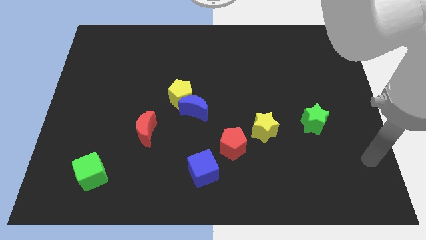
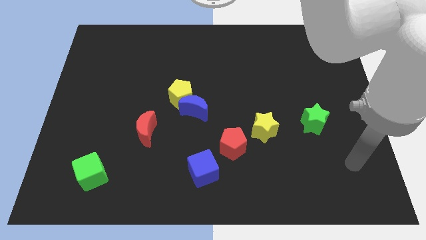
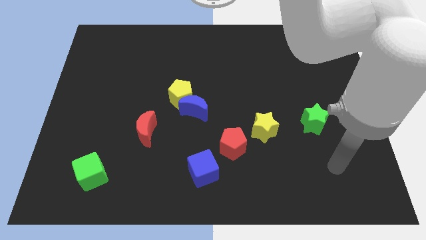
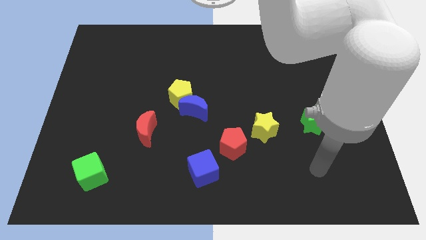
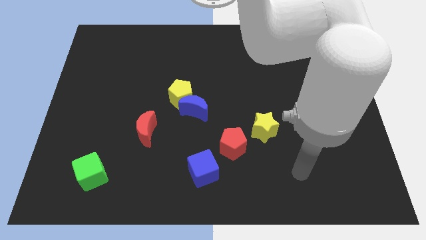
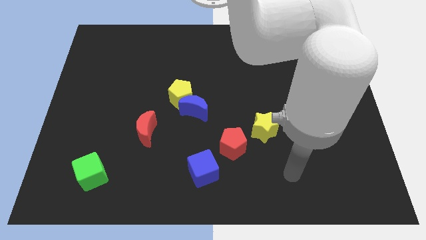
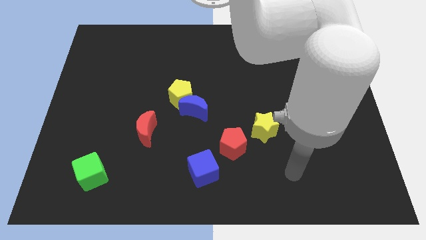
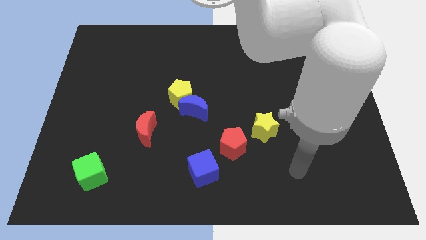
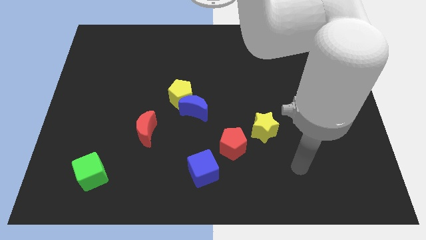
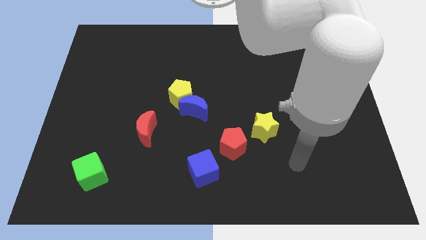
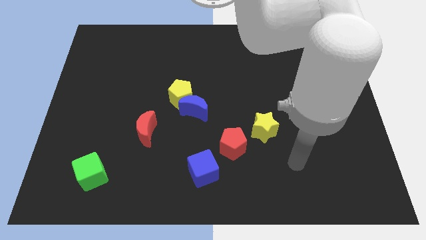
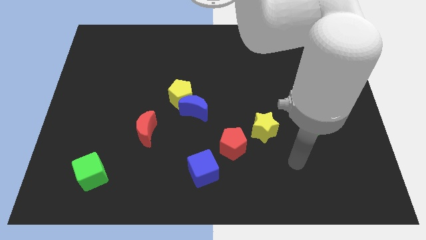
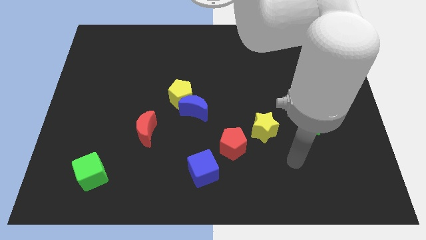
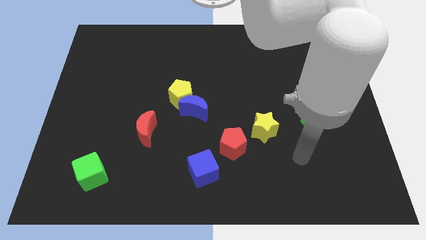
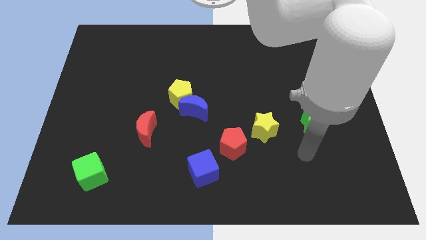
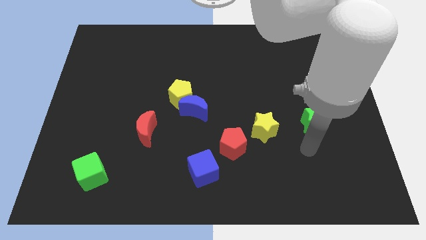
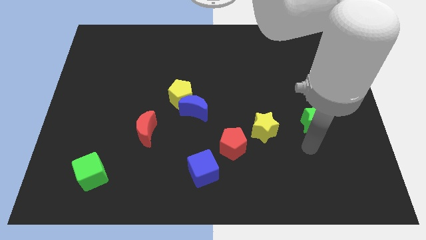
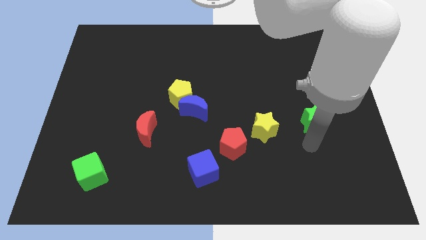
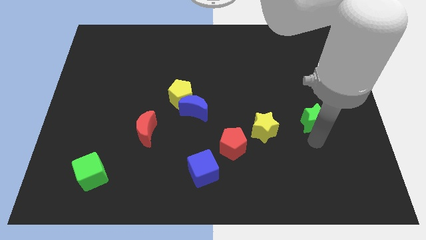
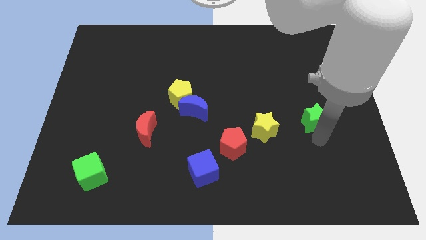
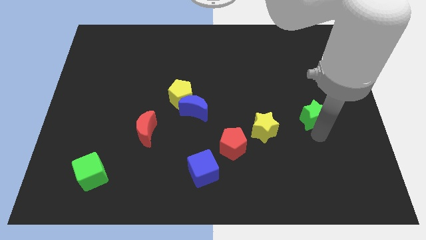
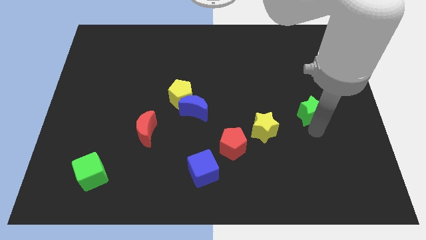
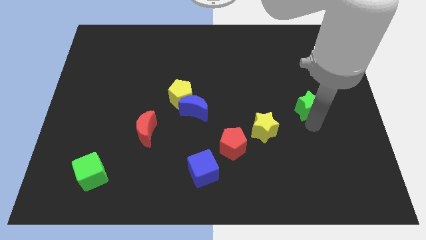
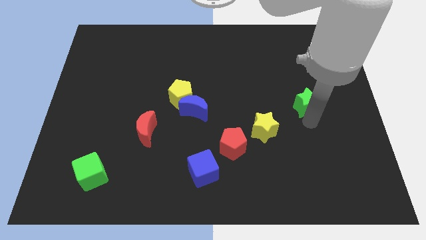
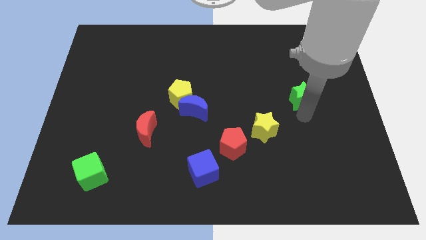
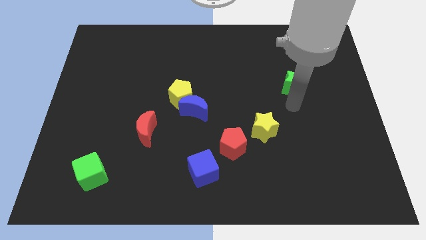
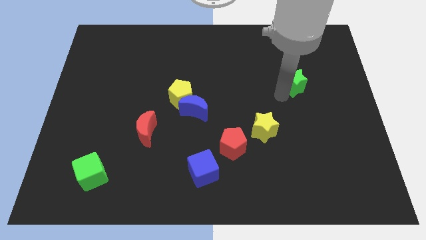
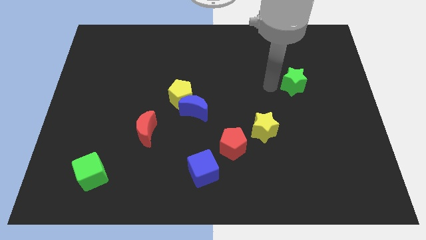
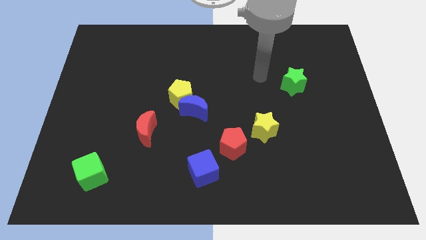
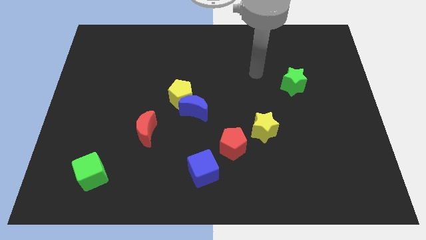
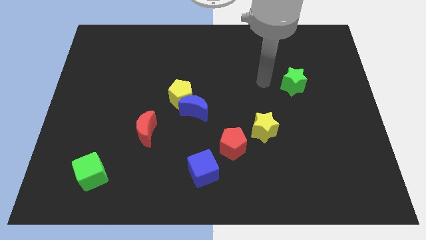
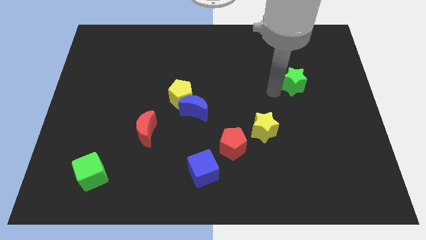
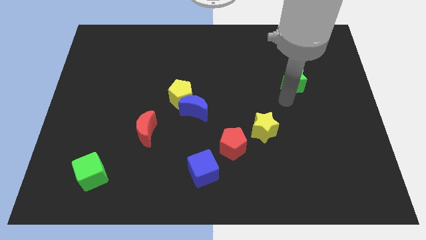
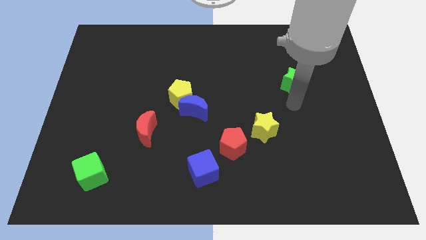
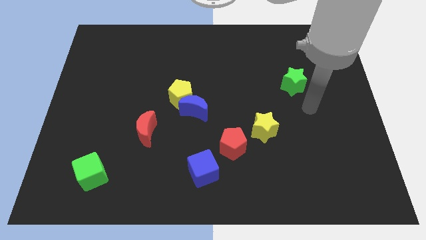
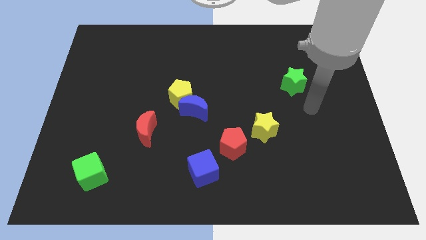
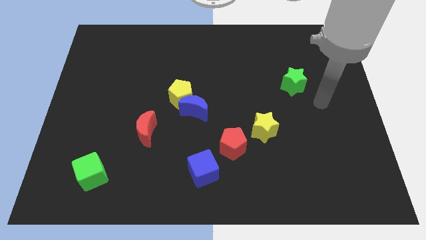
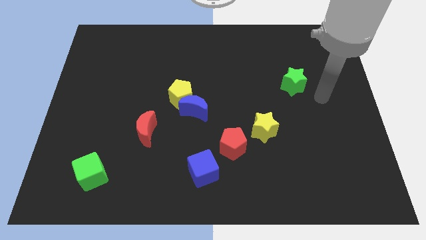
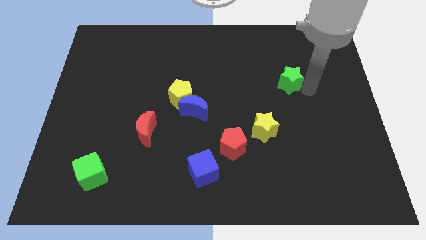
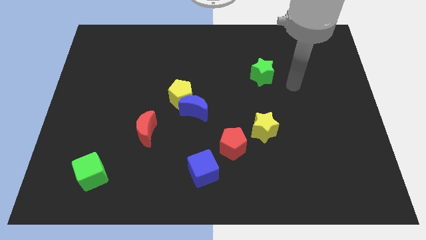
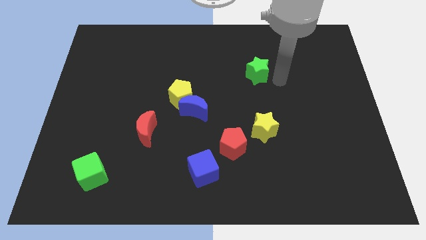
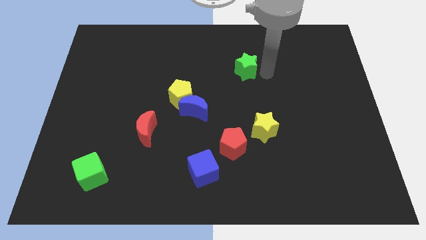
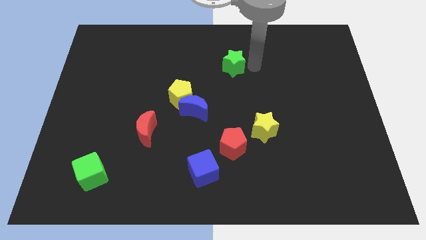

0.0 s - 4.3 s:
move green star towards the yellow pentagon

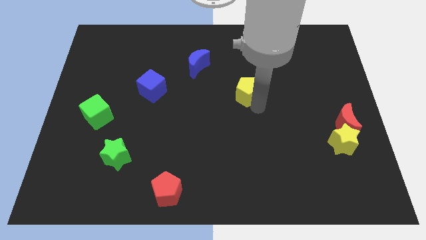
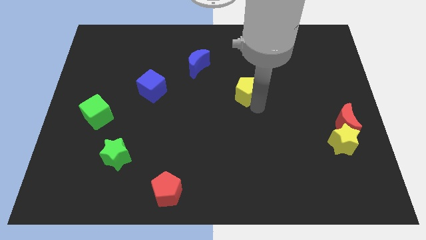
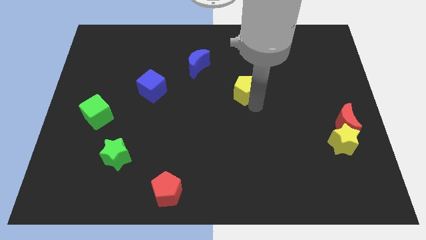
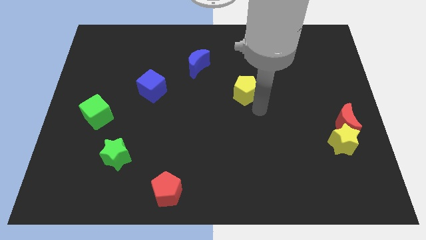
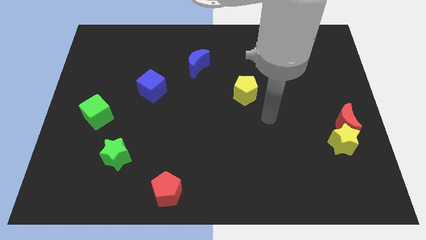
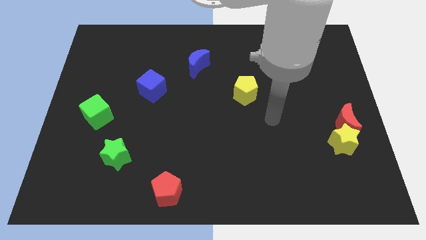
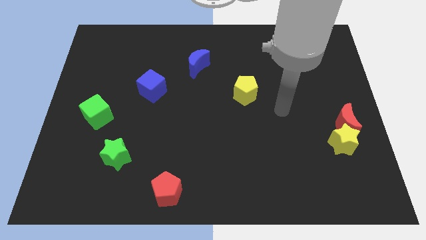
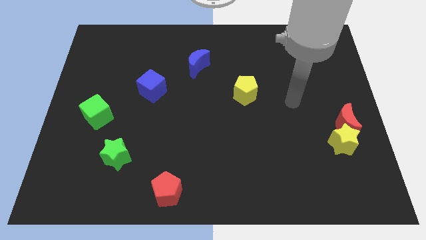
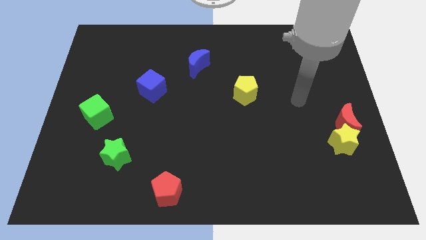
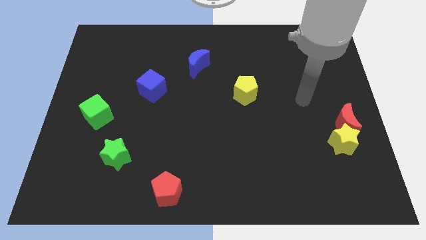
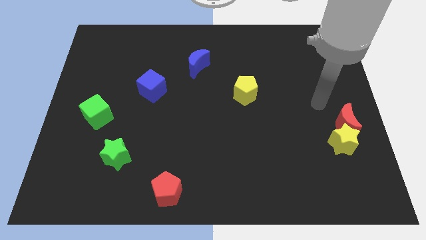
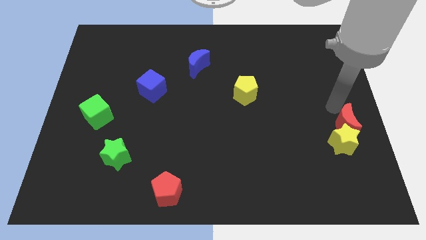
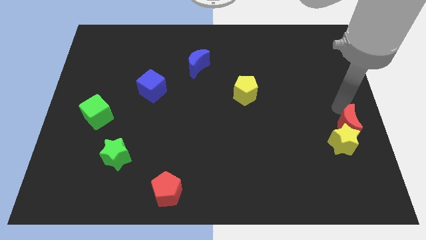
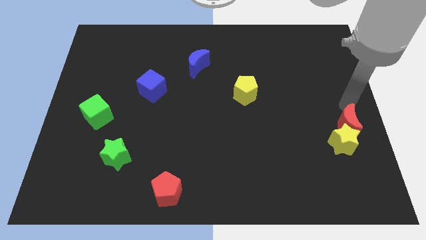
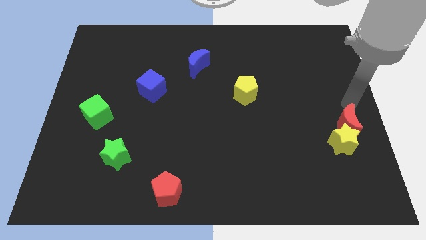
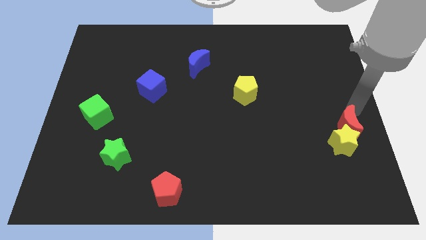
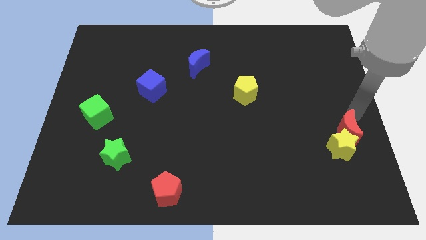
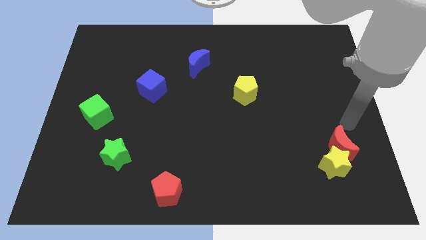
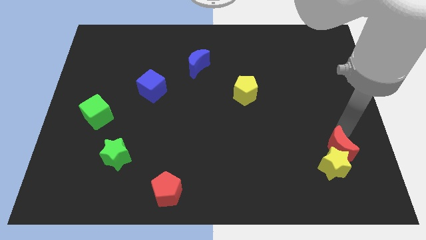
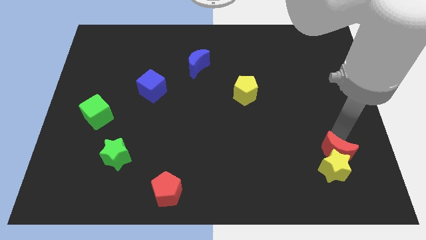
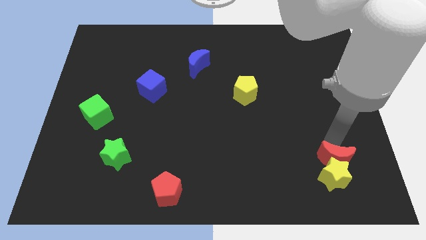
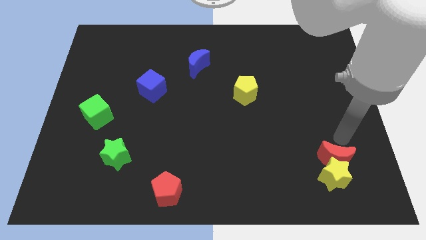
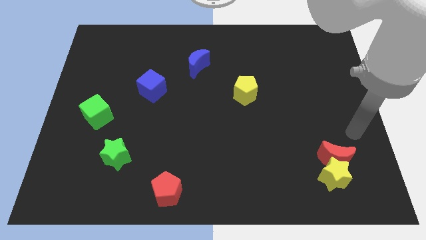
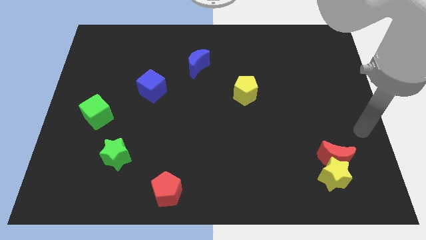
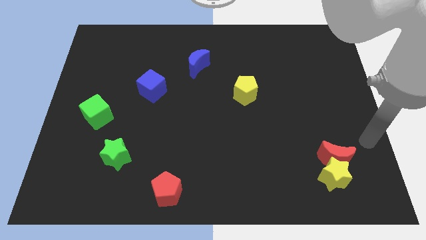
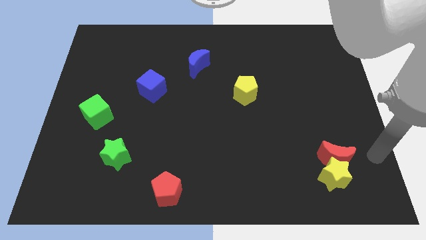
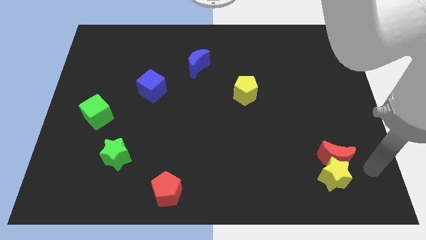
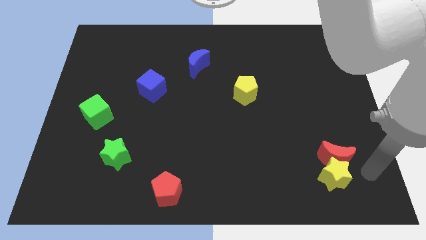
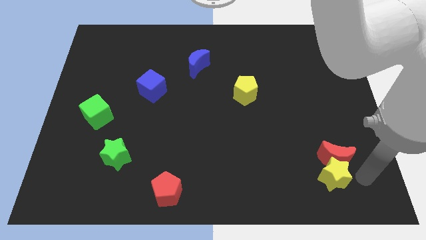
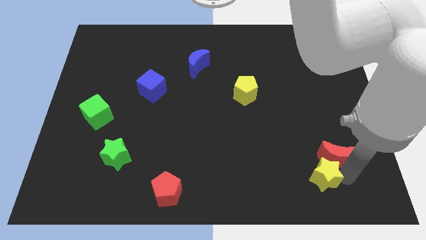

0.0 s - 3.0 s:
push red crescent towards the bottom of the board

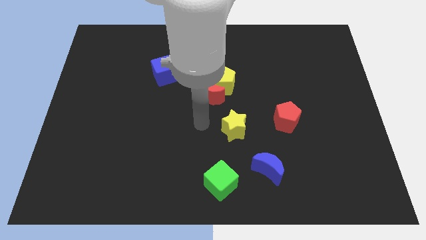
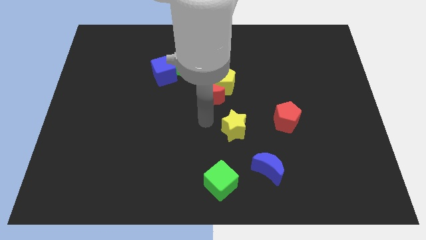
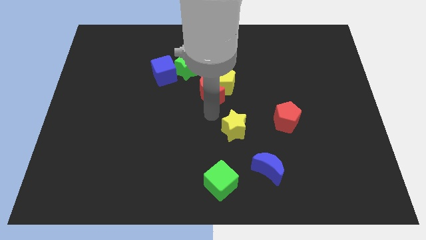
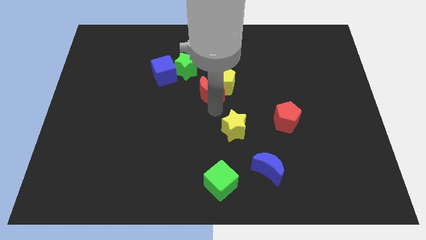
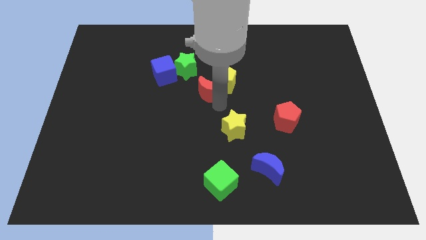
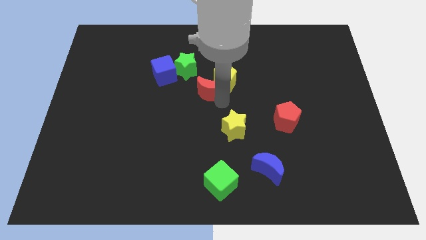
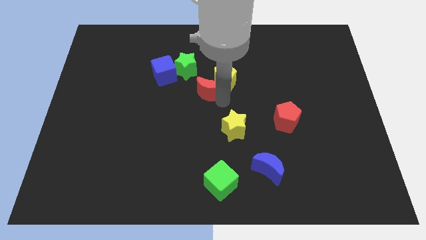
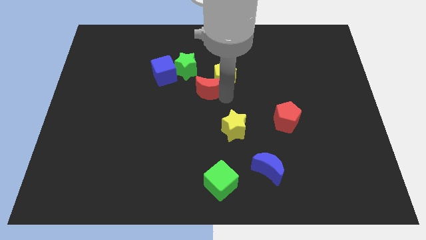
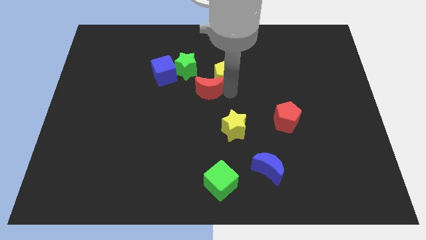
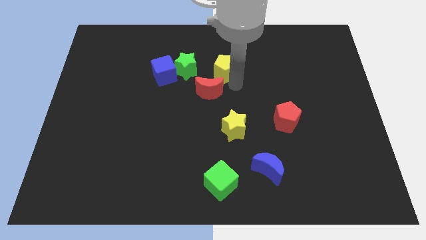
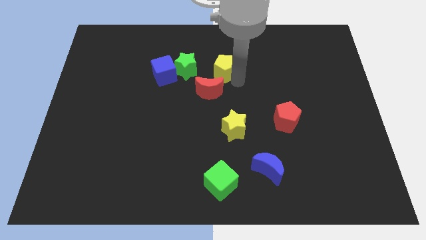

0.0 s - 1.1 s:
push the red crescent into the yellow pentagon

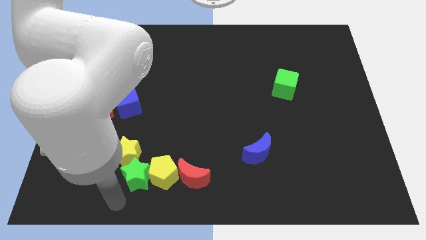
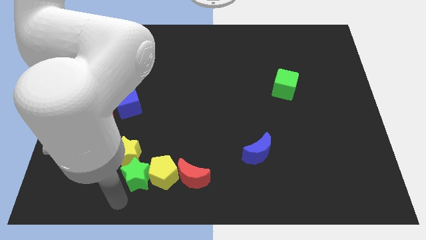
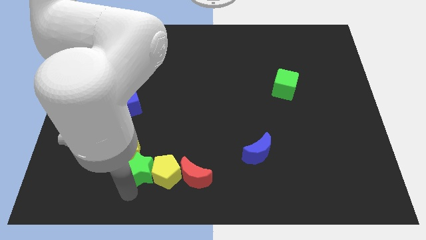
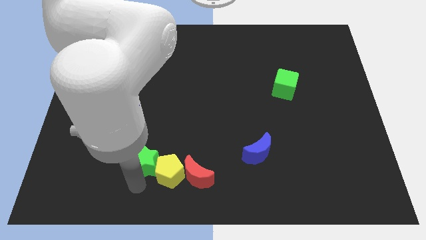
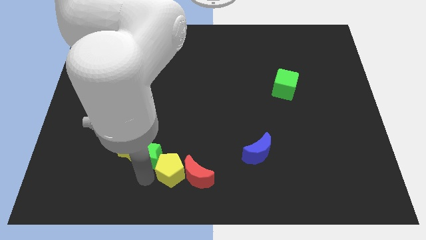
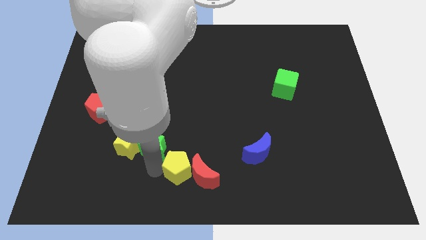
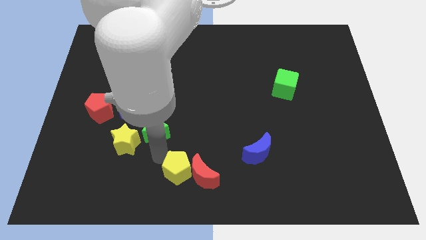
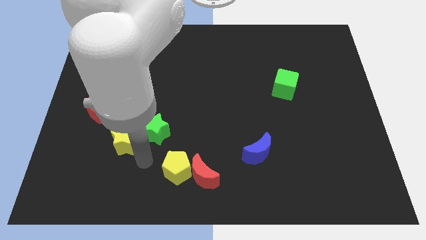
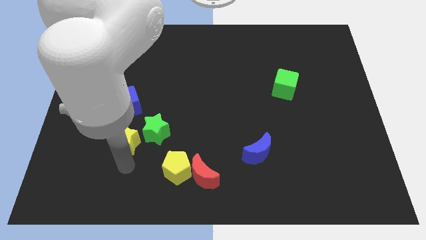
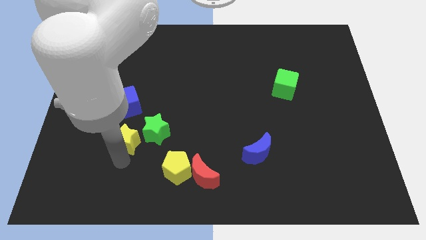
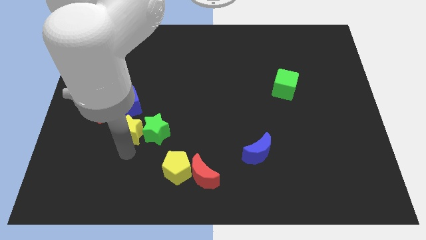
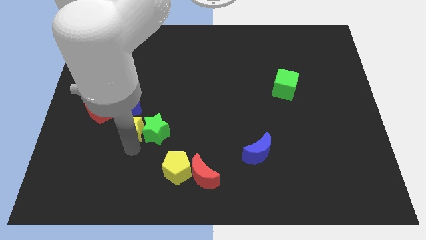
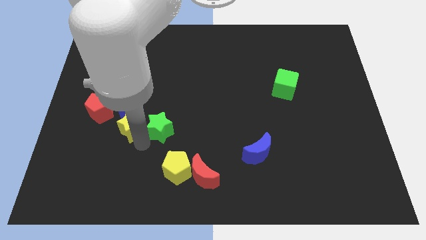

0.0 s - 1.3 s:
push the green star to the right side of yellow star
